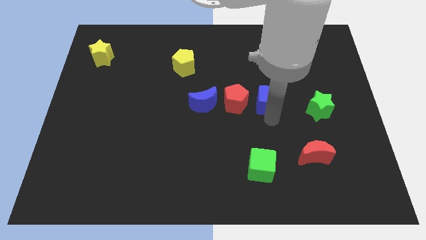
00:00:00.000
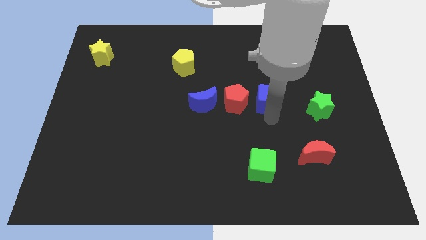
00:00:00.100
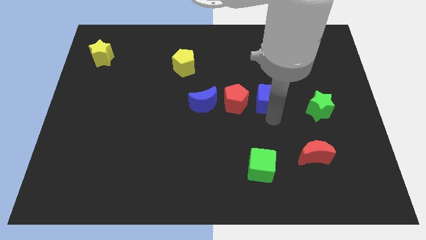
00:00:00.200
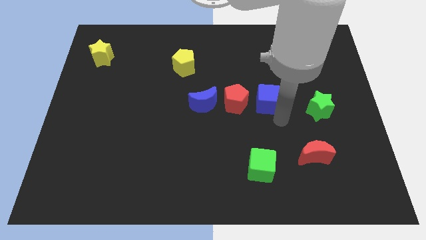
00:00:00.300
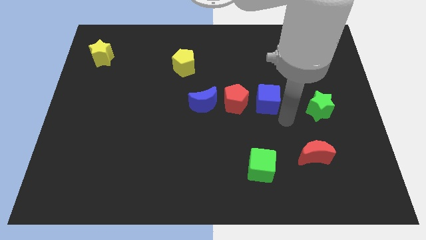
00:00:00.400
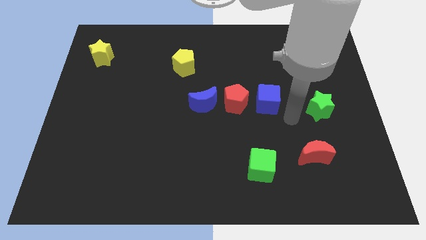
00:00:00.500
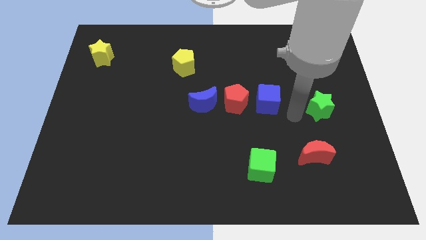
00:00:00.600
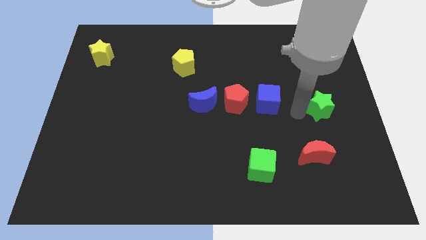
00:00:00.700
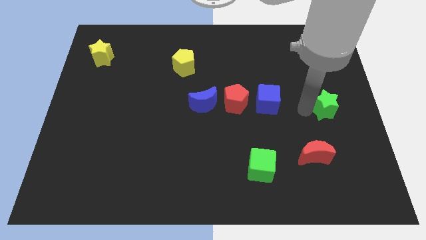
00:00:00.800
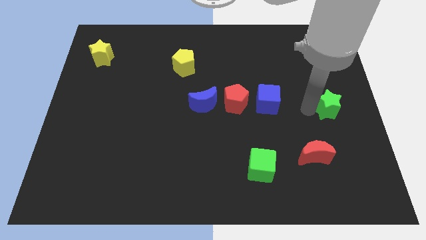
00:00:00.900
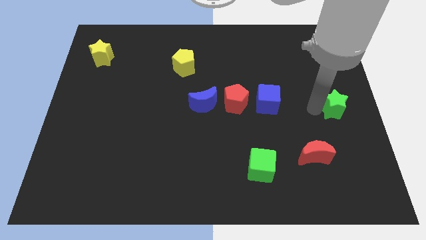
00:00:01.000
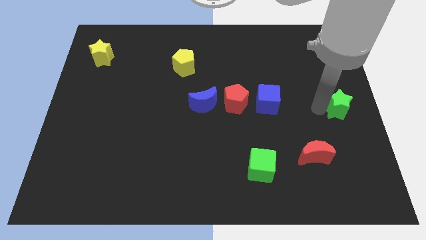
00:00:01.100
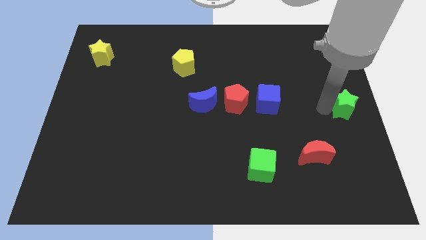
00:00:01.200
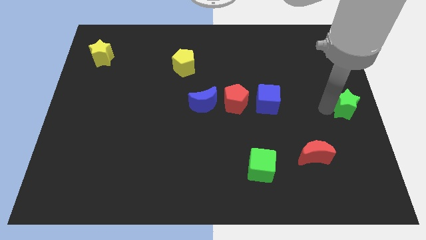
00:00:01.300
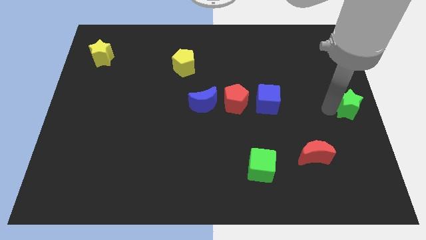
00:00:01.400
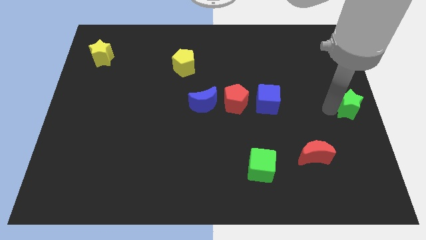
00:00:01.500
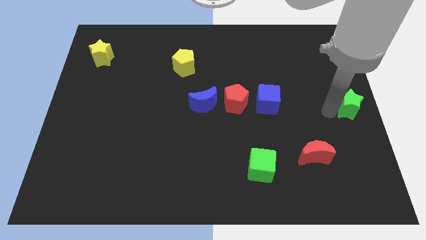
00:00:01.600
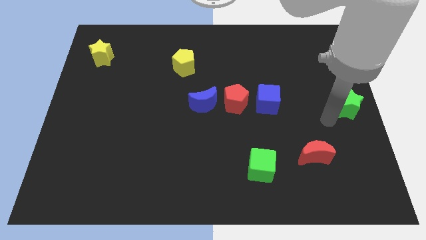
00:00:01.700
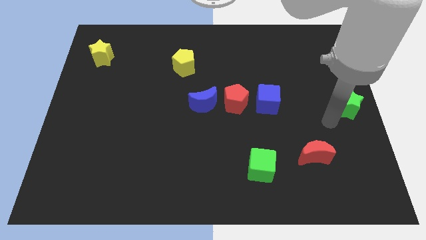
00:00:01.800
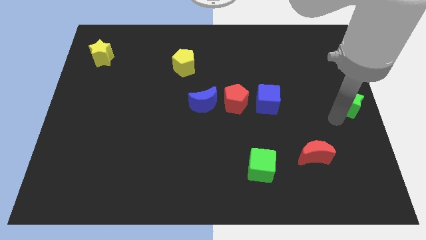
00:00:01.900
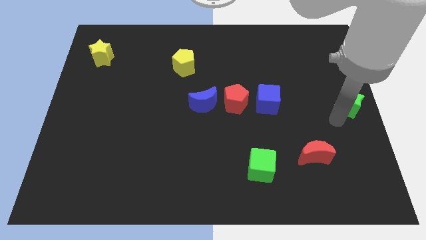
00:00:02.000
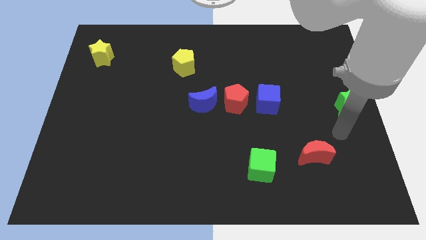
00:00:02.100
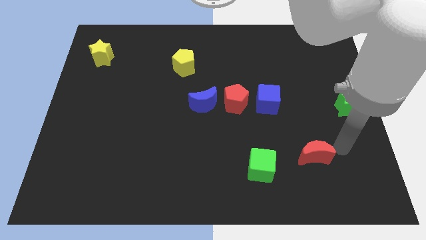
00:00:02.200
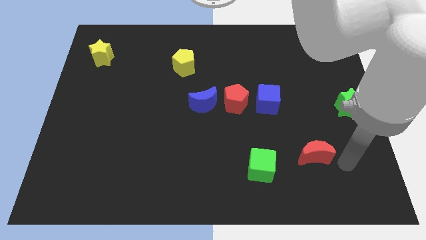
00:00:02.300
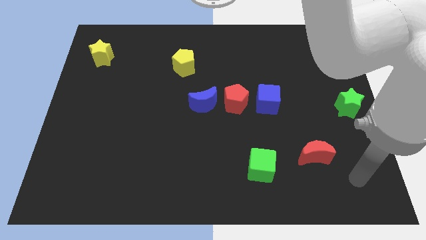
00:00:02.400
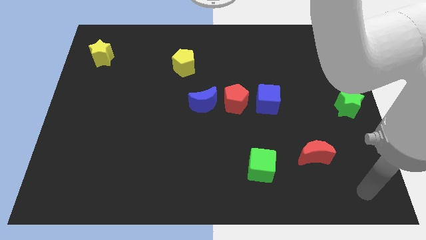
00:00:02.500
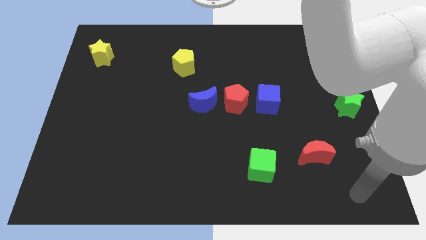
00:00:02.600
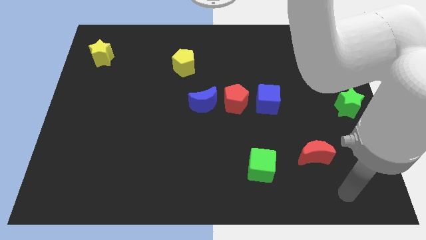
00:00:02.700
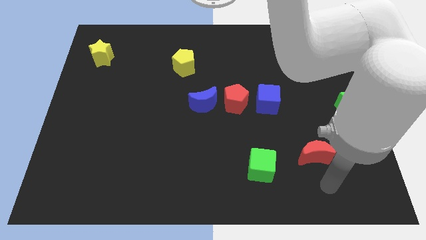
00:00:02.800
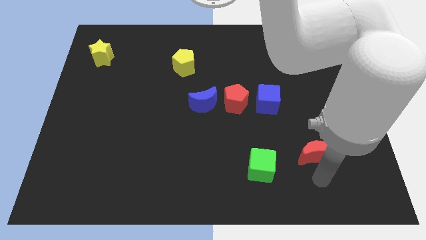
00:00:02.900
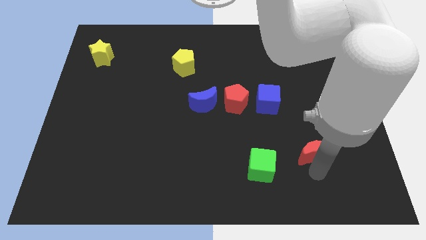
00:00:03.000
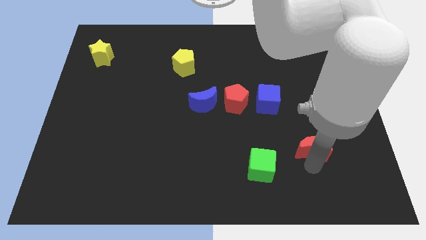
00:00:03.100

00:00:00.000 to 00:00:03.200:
push the green star to the right center of the board

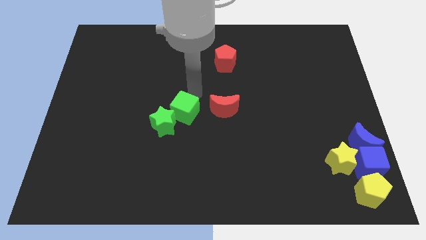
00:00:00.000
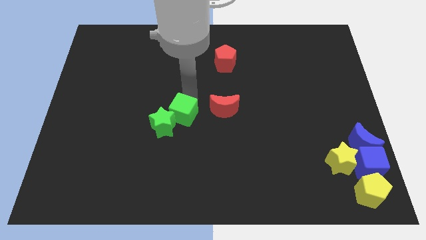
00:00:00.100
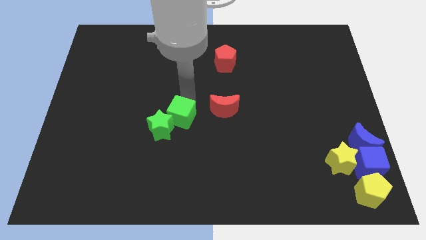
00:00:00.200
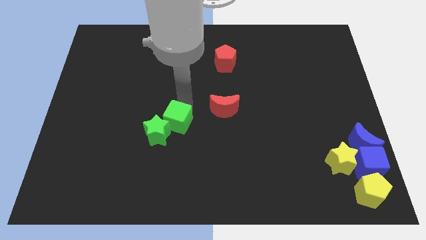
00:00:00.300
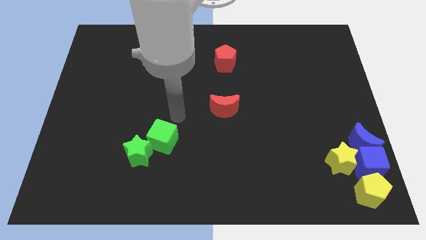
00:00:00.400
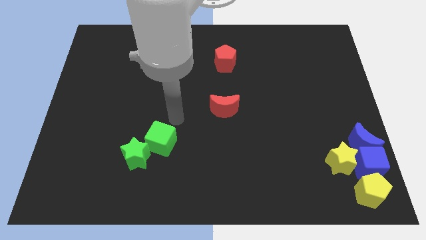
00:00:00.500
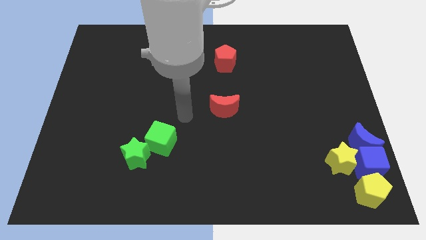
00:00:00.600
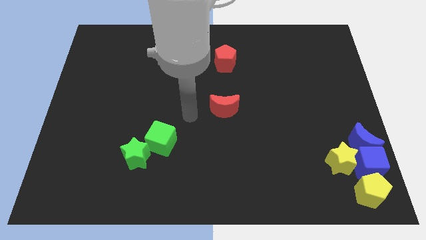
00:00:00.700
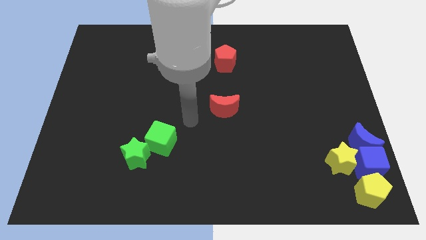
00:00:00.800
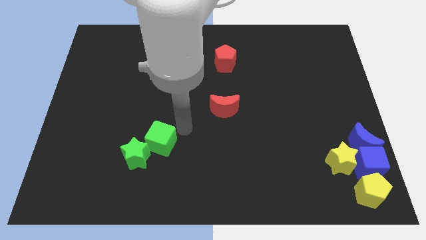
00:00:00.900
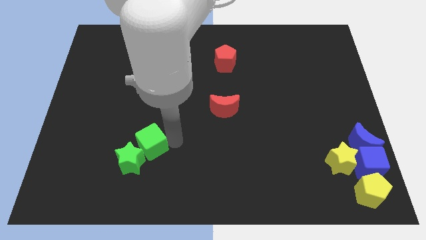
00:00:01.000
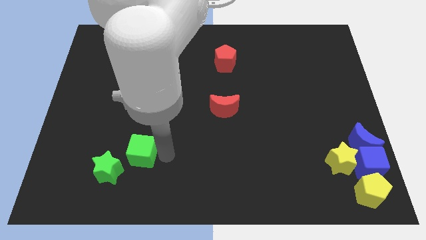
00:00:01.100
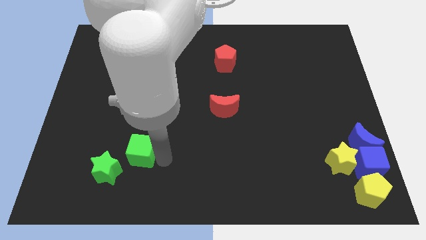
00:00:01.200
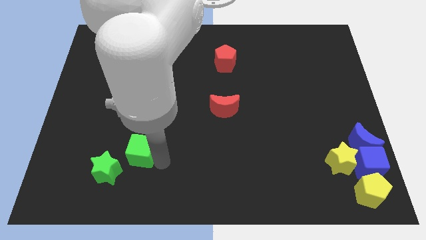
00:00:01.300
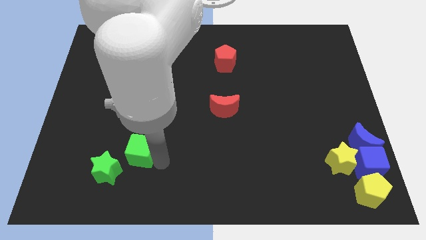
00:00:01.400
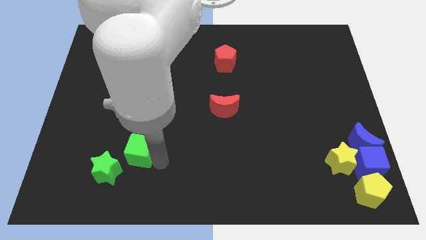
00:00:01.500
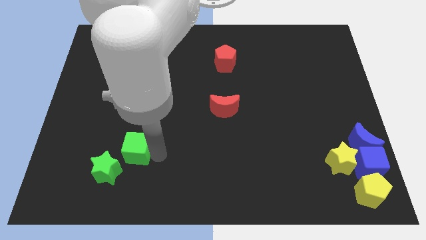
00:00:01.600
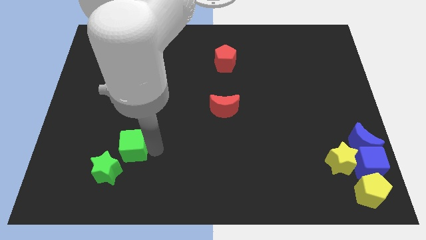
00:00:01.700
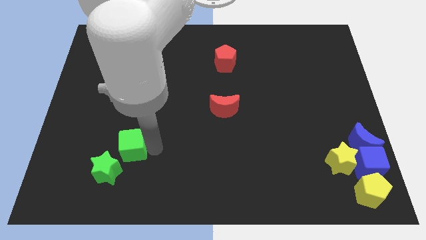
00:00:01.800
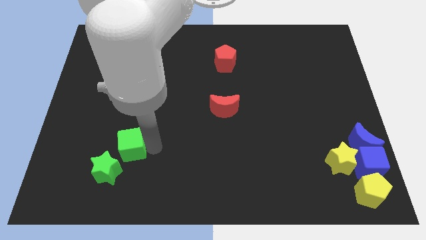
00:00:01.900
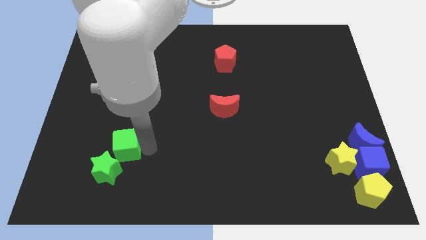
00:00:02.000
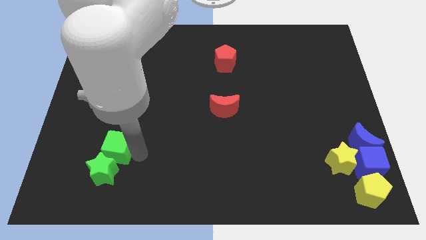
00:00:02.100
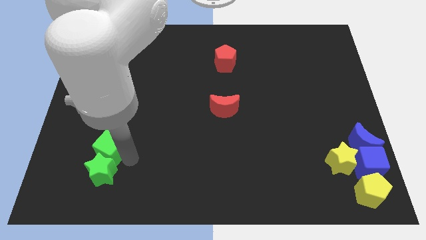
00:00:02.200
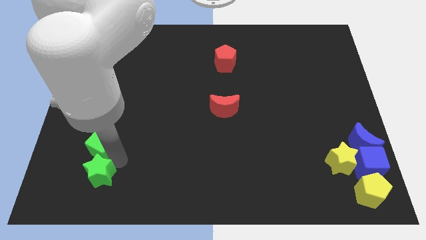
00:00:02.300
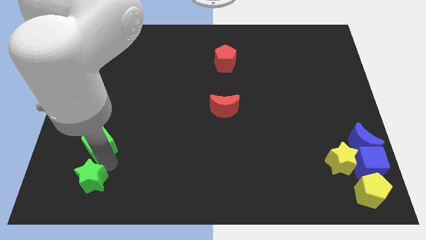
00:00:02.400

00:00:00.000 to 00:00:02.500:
move the green cube along the green star

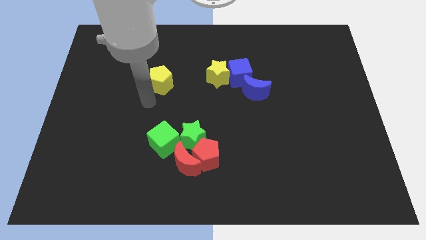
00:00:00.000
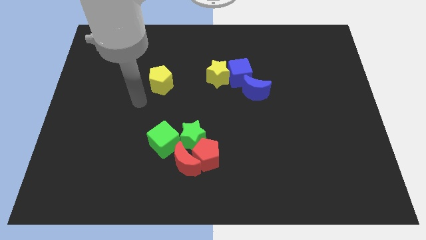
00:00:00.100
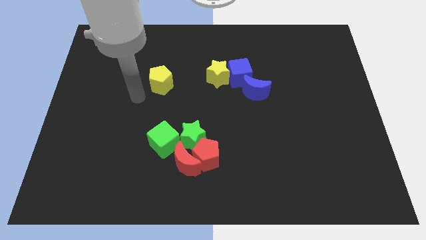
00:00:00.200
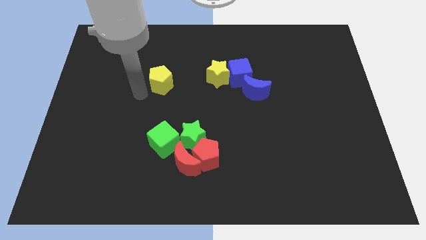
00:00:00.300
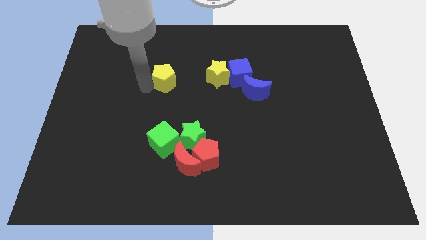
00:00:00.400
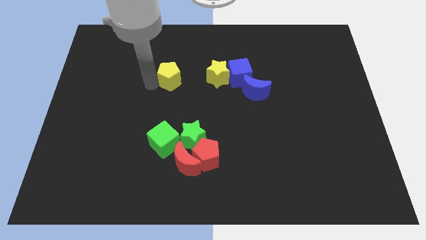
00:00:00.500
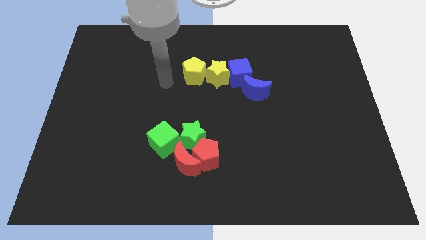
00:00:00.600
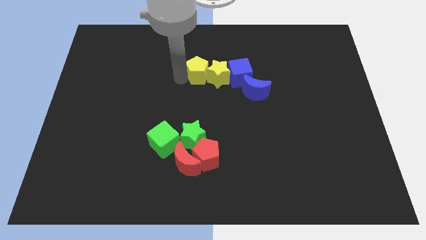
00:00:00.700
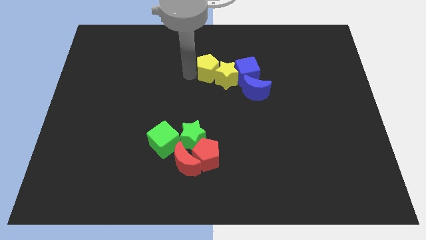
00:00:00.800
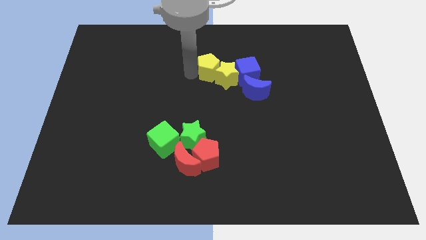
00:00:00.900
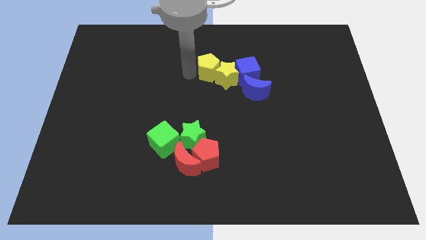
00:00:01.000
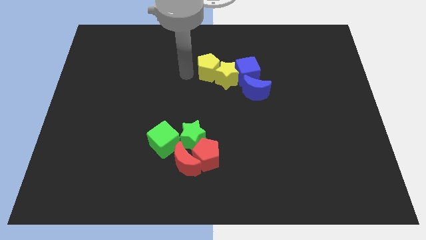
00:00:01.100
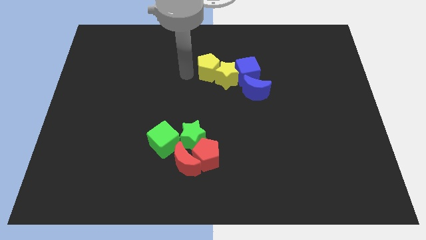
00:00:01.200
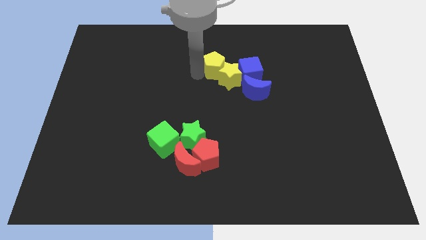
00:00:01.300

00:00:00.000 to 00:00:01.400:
push the yellow pentagon into the yellow star

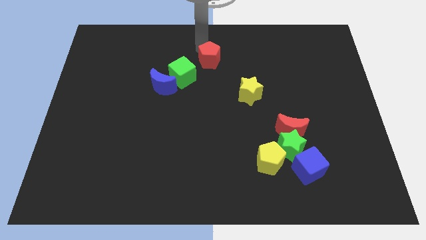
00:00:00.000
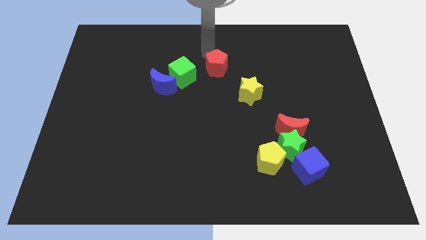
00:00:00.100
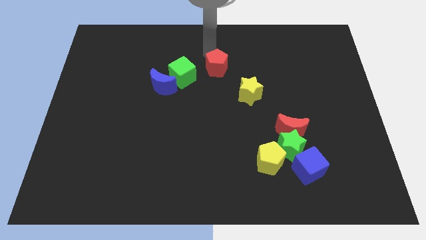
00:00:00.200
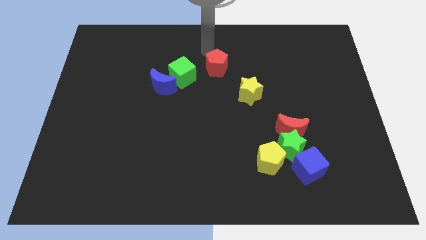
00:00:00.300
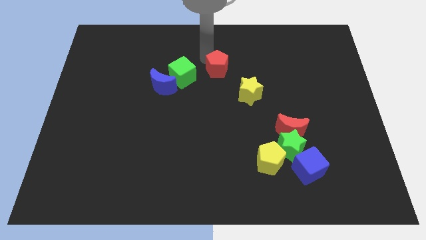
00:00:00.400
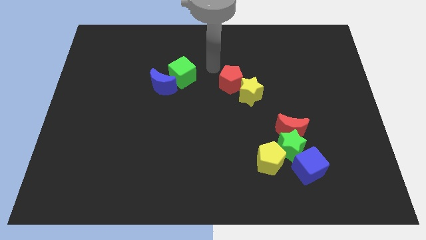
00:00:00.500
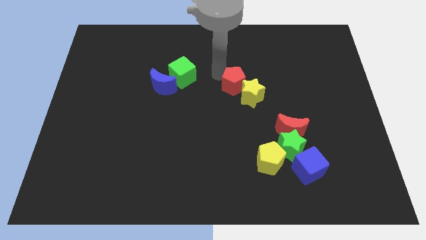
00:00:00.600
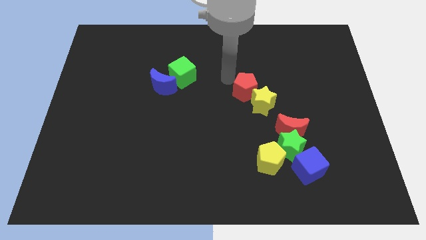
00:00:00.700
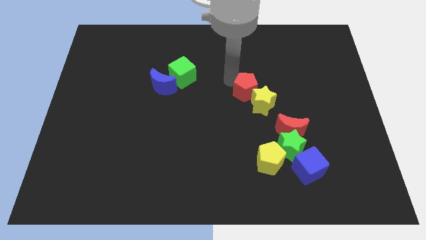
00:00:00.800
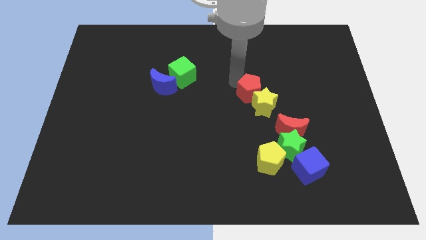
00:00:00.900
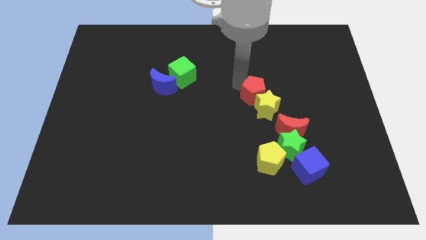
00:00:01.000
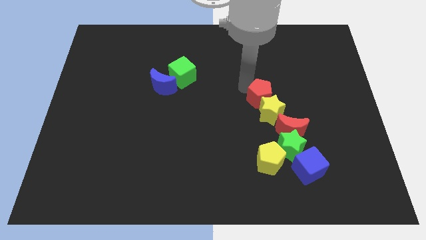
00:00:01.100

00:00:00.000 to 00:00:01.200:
push the red pentagon into the yellow star

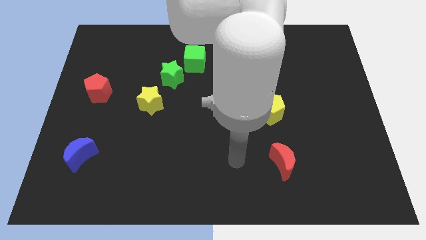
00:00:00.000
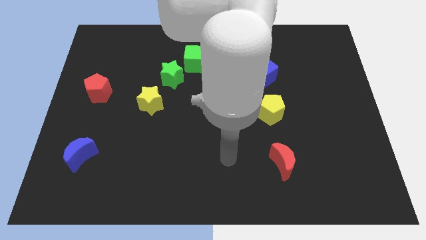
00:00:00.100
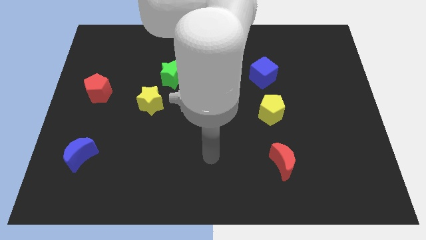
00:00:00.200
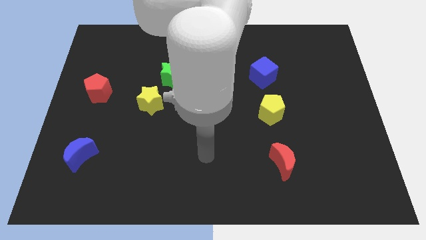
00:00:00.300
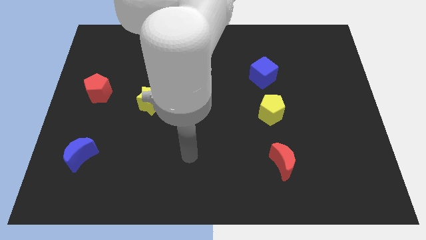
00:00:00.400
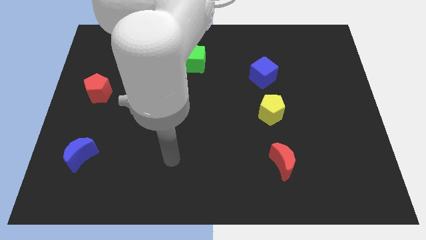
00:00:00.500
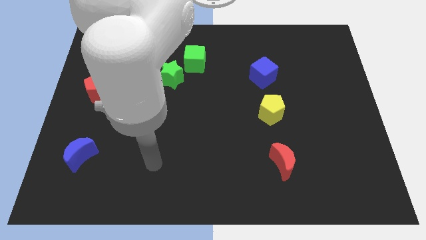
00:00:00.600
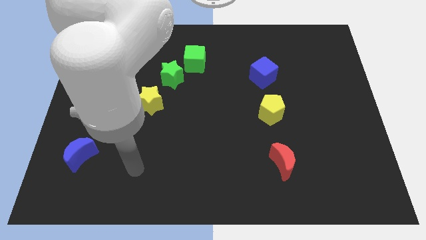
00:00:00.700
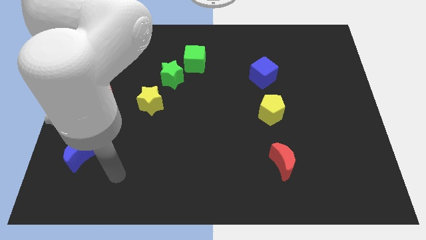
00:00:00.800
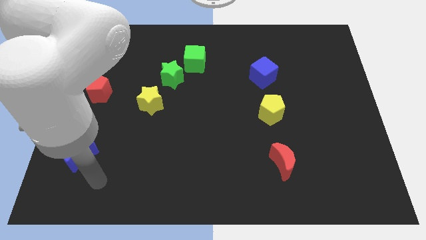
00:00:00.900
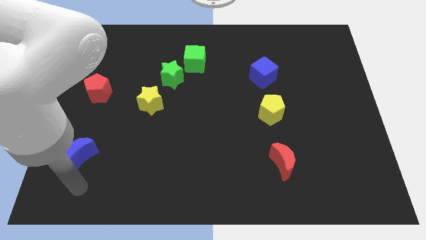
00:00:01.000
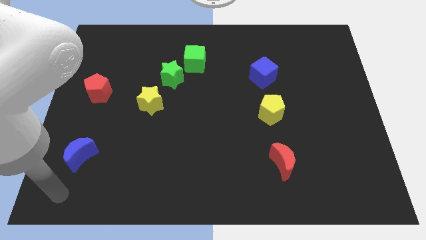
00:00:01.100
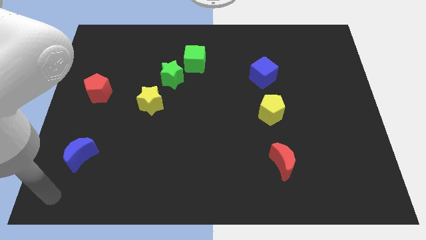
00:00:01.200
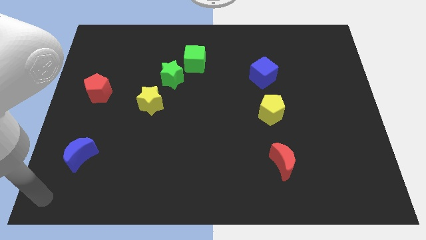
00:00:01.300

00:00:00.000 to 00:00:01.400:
place the arm to the bottom left corner of the board
